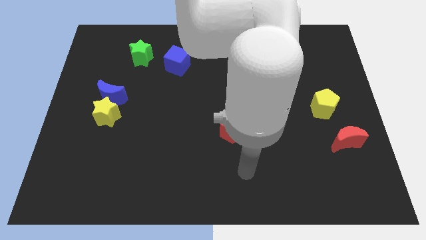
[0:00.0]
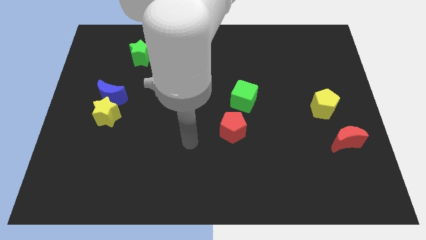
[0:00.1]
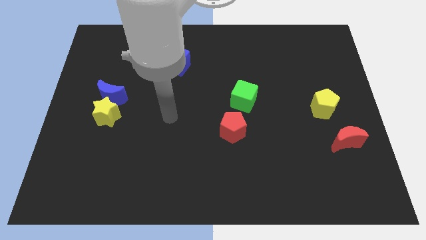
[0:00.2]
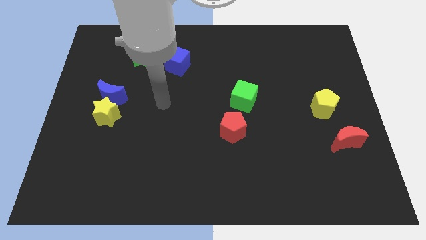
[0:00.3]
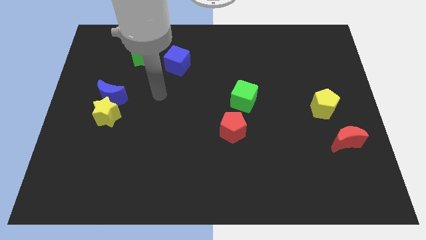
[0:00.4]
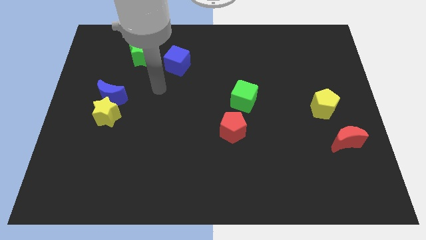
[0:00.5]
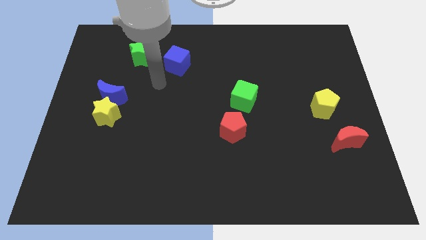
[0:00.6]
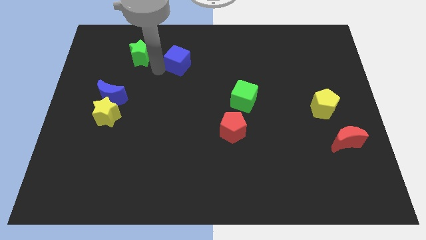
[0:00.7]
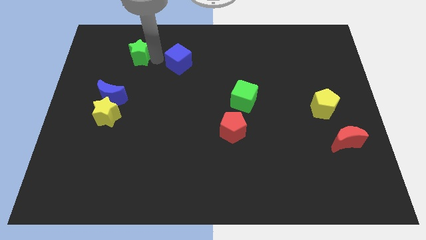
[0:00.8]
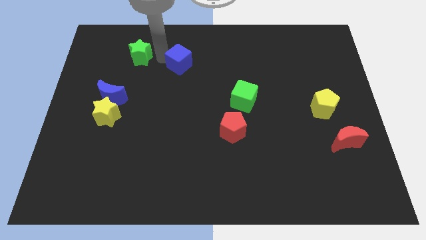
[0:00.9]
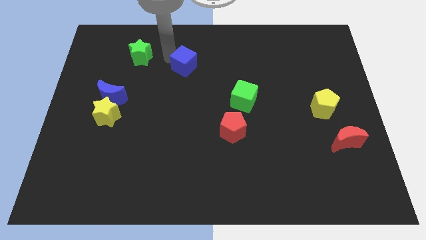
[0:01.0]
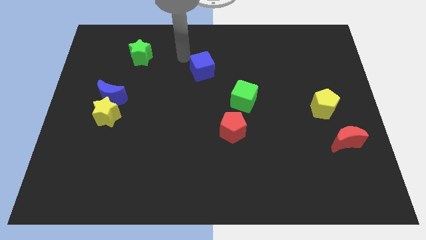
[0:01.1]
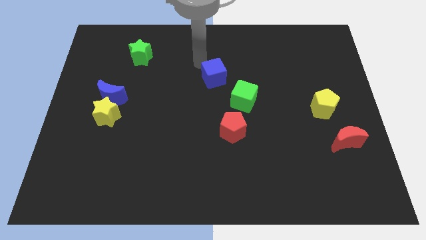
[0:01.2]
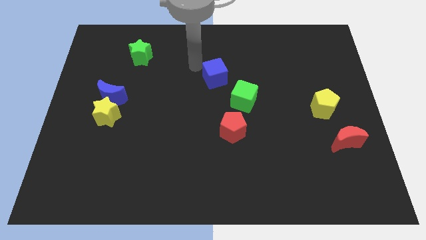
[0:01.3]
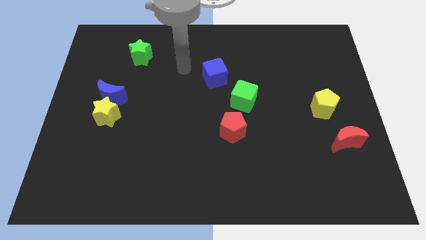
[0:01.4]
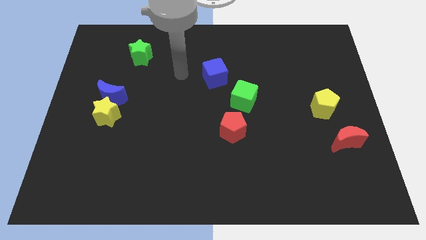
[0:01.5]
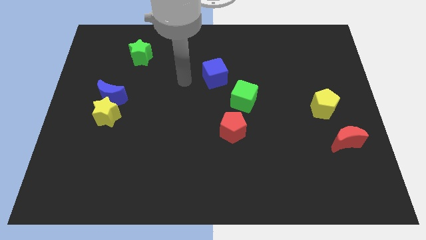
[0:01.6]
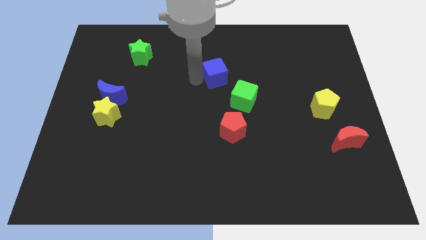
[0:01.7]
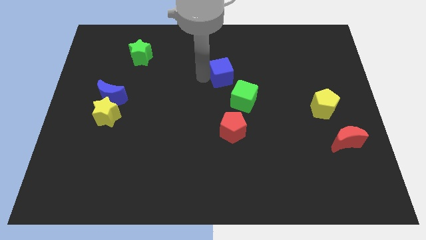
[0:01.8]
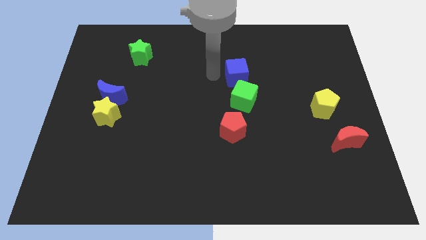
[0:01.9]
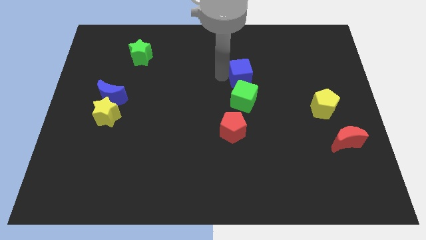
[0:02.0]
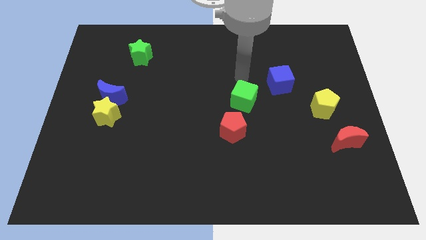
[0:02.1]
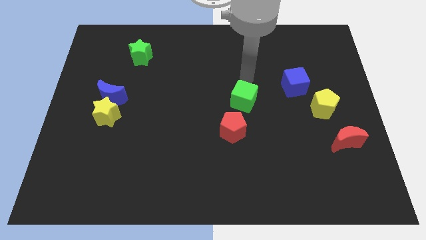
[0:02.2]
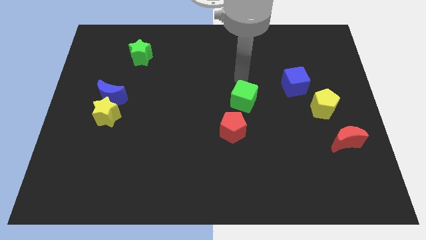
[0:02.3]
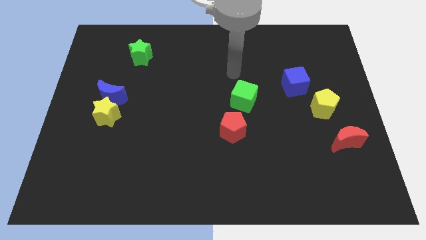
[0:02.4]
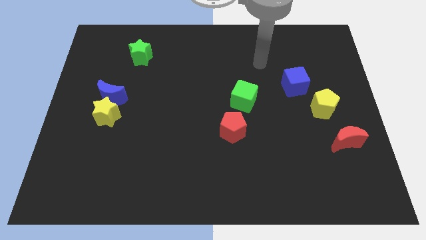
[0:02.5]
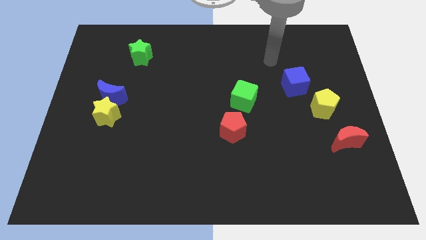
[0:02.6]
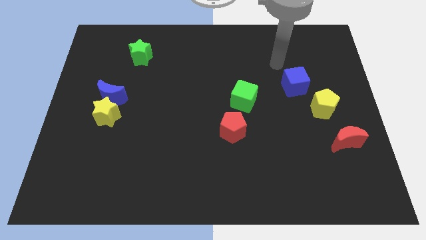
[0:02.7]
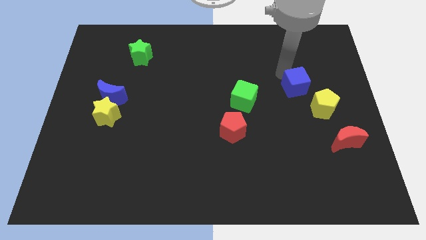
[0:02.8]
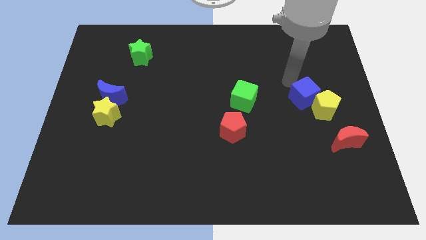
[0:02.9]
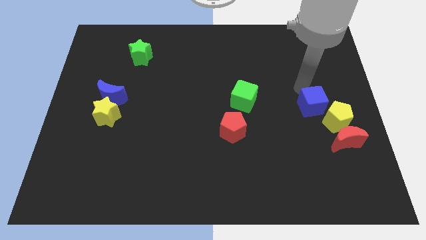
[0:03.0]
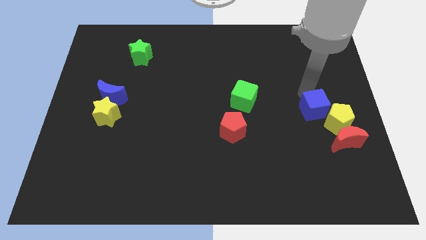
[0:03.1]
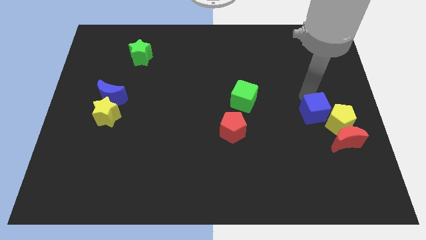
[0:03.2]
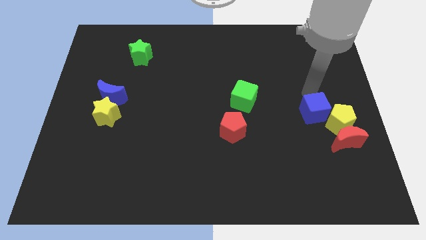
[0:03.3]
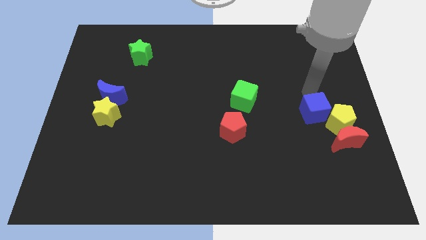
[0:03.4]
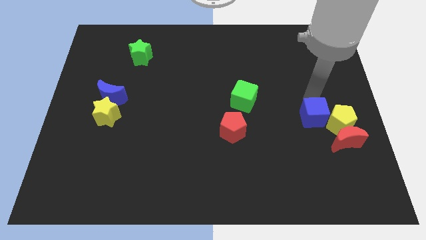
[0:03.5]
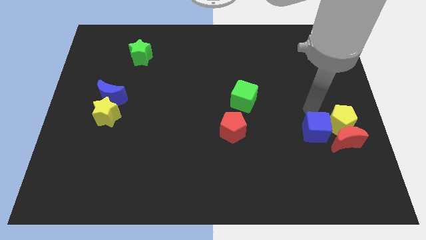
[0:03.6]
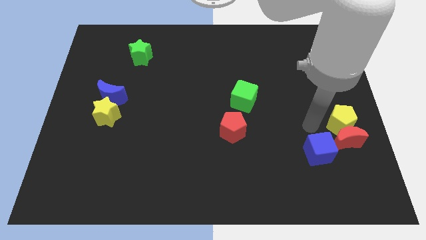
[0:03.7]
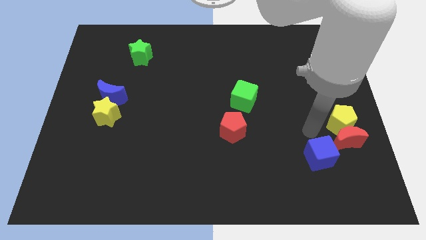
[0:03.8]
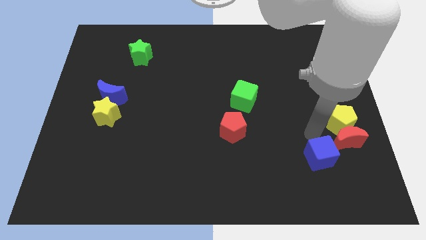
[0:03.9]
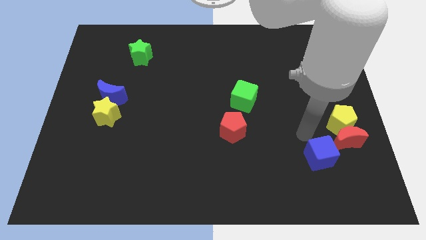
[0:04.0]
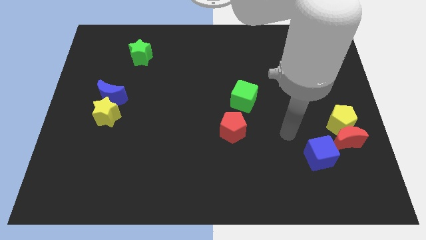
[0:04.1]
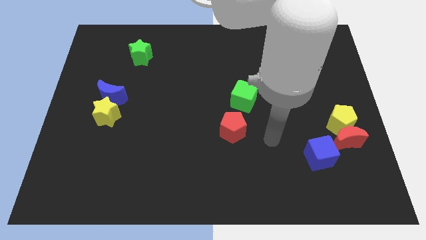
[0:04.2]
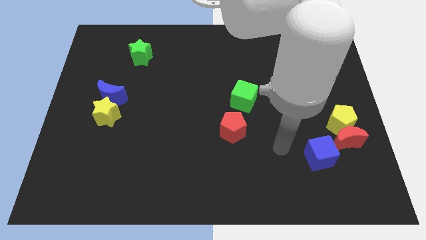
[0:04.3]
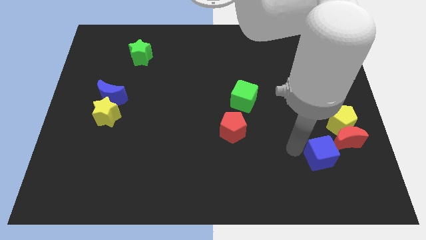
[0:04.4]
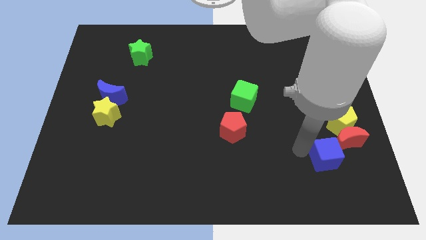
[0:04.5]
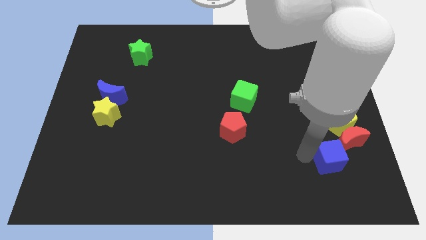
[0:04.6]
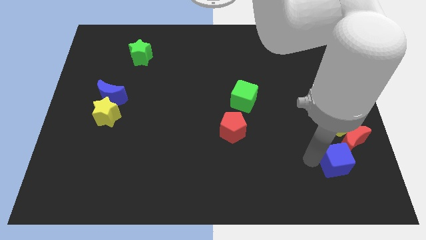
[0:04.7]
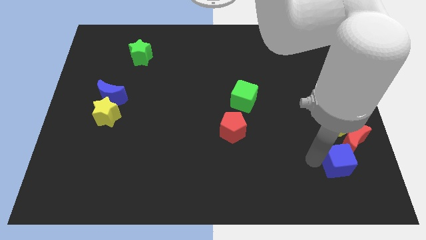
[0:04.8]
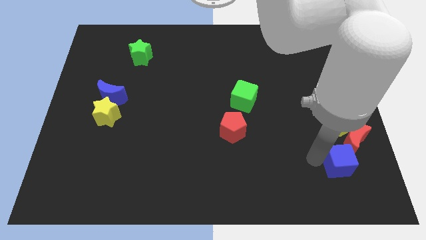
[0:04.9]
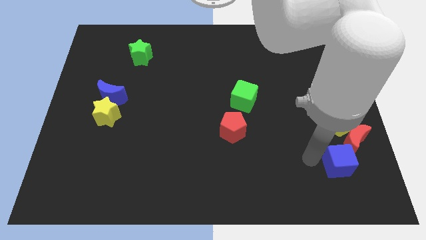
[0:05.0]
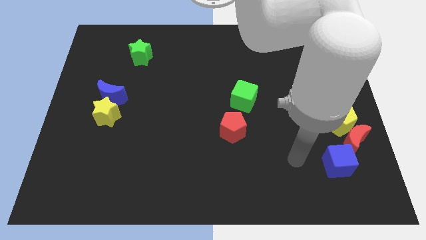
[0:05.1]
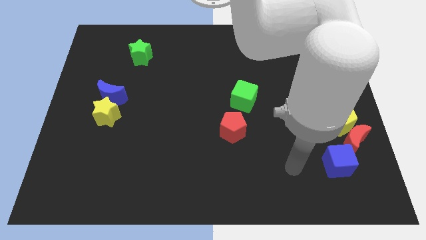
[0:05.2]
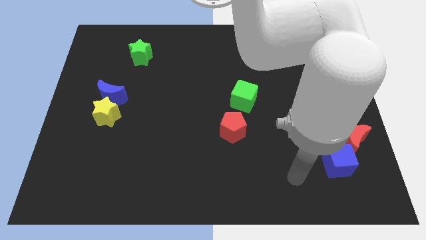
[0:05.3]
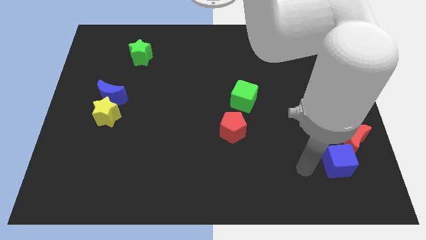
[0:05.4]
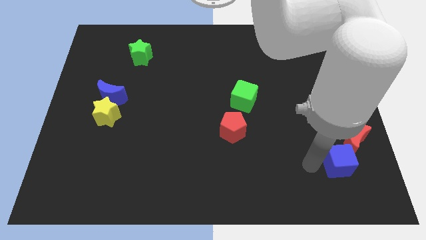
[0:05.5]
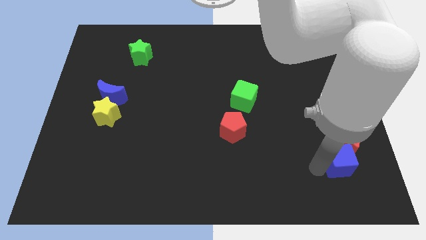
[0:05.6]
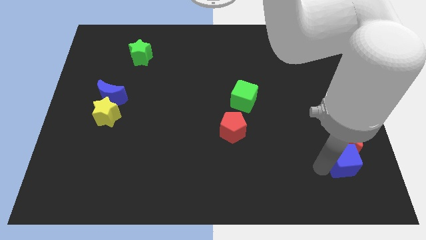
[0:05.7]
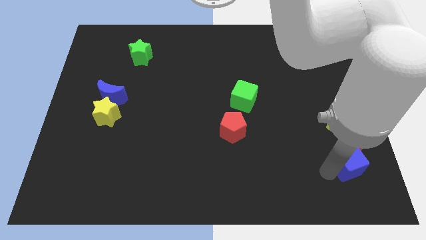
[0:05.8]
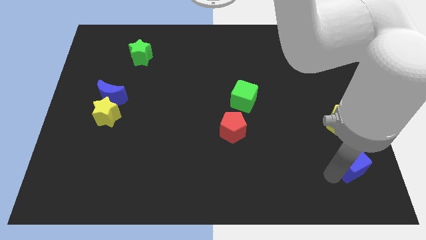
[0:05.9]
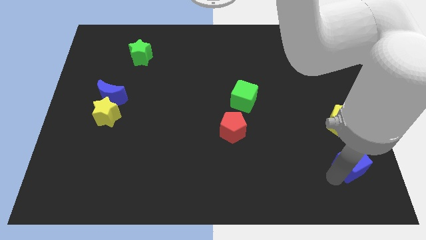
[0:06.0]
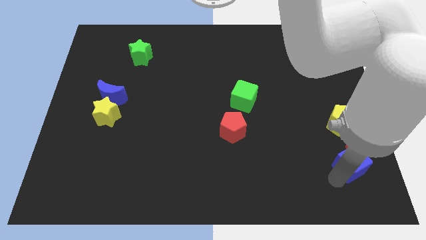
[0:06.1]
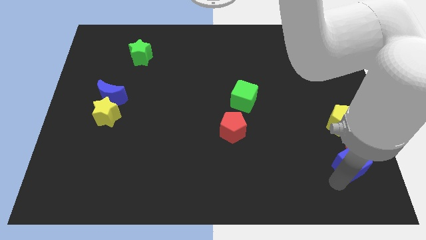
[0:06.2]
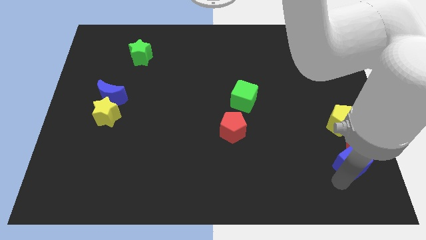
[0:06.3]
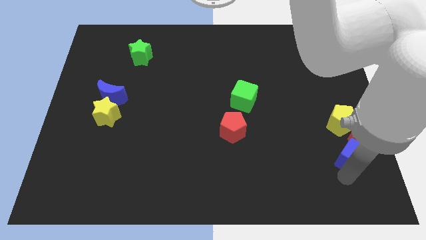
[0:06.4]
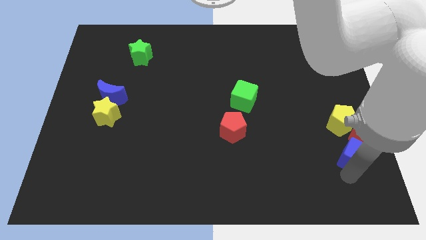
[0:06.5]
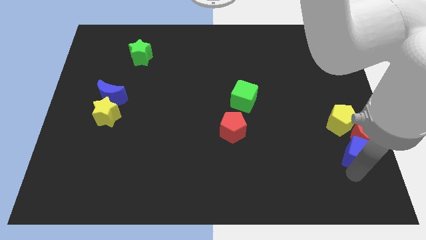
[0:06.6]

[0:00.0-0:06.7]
move the blue cube towards the red moon

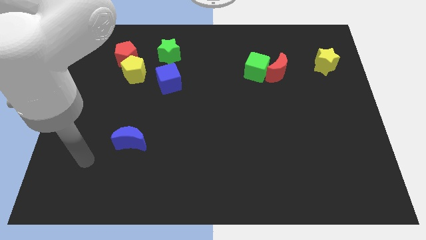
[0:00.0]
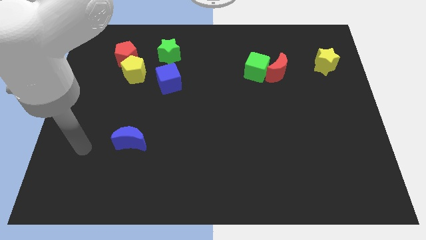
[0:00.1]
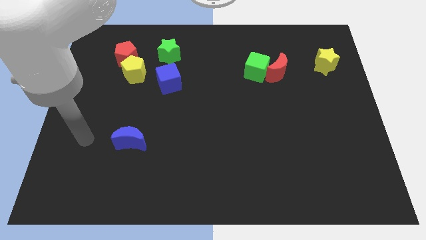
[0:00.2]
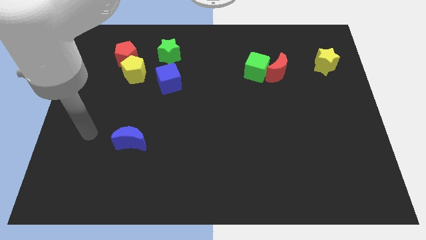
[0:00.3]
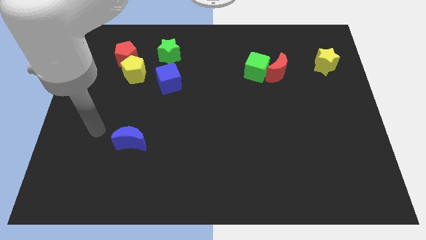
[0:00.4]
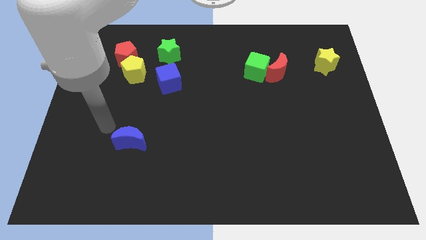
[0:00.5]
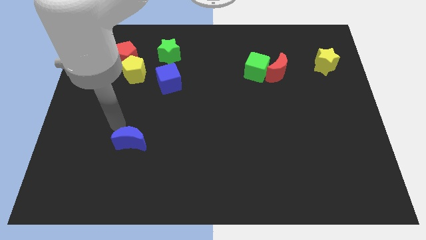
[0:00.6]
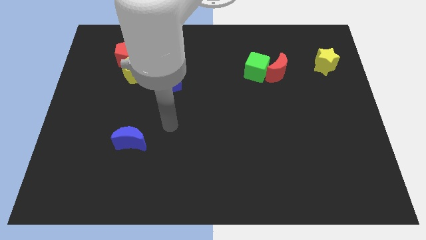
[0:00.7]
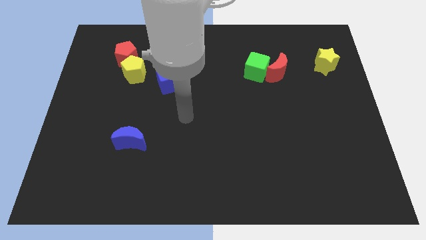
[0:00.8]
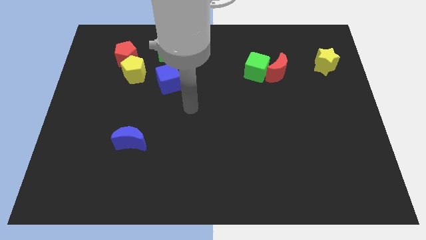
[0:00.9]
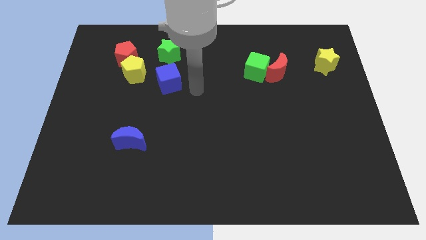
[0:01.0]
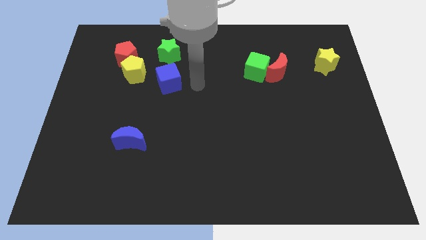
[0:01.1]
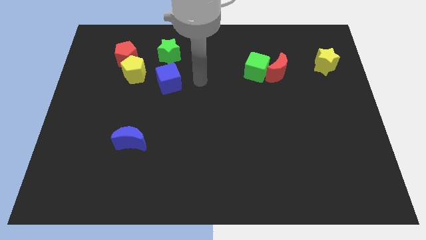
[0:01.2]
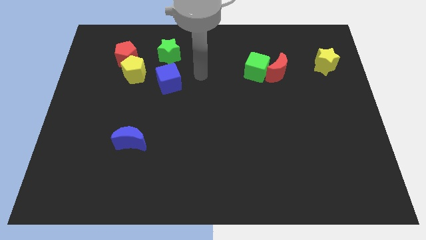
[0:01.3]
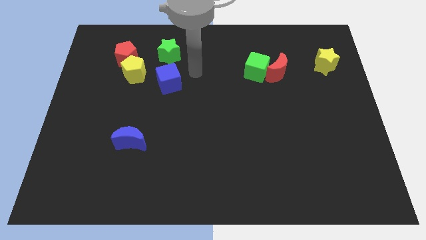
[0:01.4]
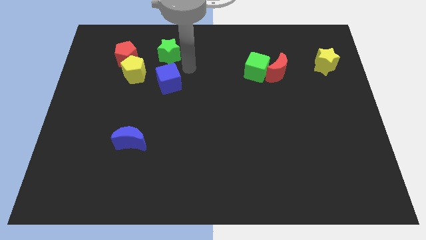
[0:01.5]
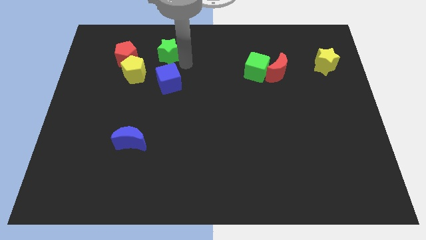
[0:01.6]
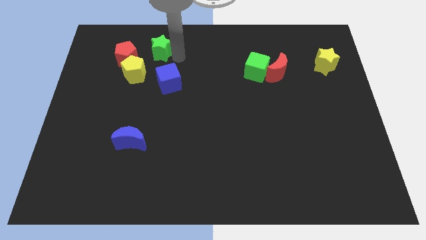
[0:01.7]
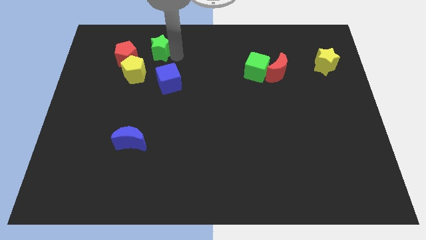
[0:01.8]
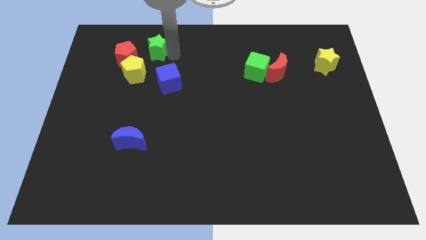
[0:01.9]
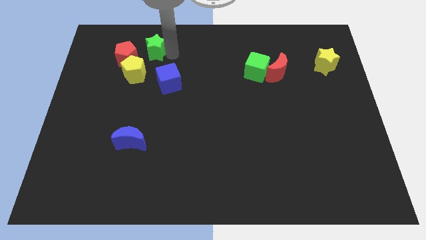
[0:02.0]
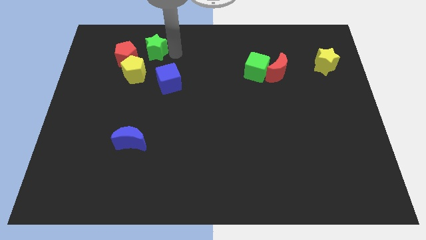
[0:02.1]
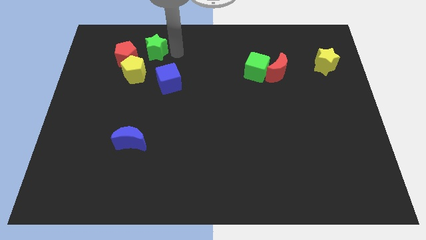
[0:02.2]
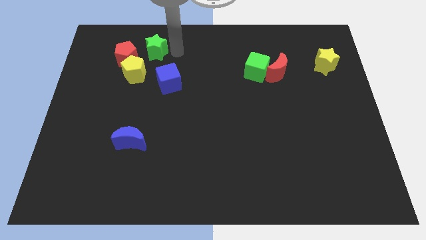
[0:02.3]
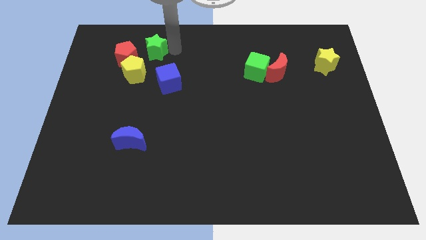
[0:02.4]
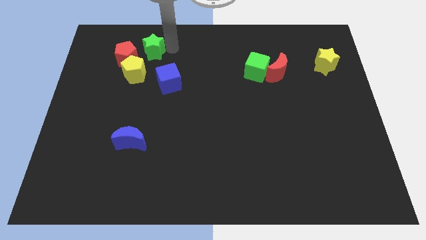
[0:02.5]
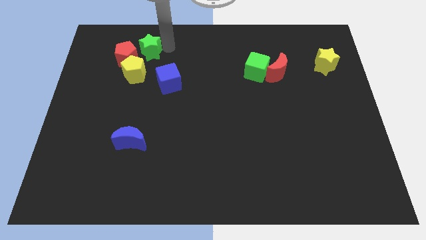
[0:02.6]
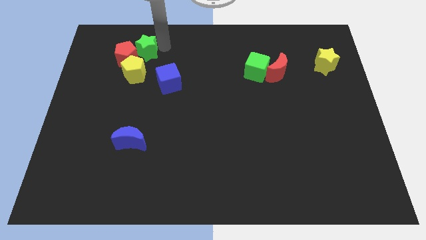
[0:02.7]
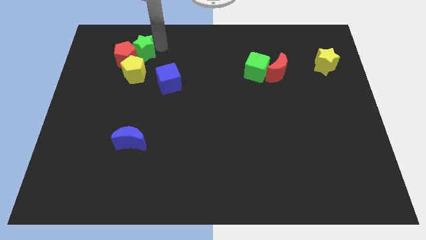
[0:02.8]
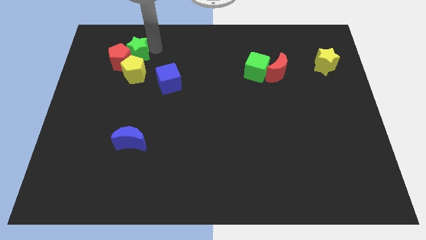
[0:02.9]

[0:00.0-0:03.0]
put the green star next to the red pentagon
